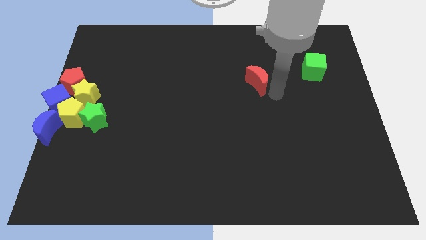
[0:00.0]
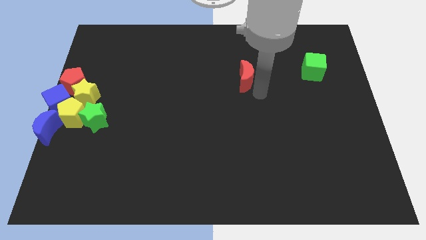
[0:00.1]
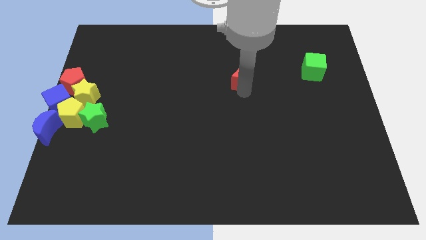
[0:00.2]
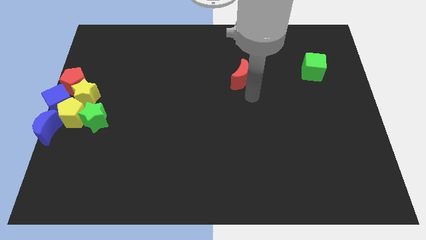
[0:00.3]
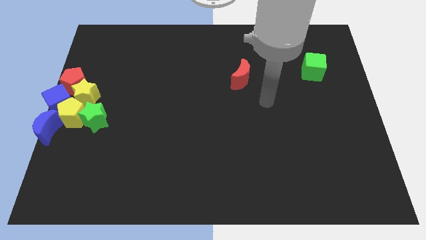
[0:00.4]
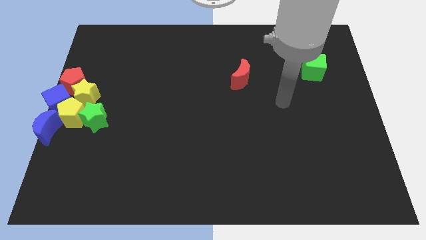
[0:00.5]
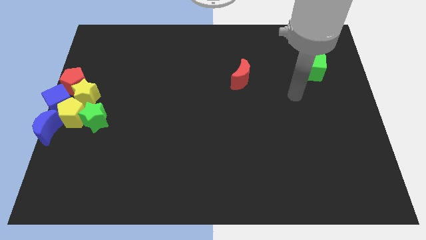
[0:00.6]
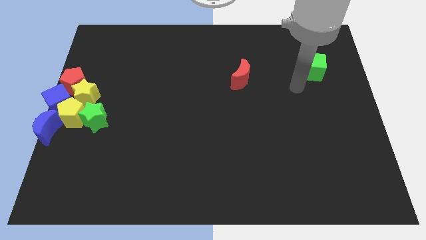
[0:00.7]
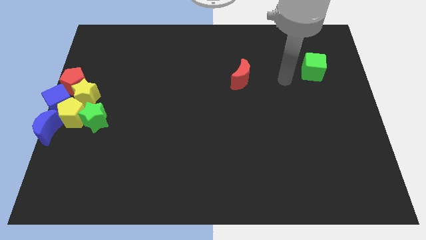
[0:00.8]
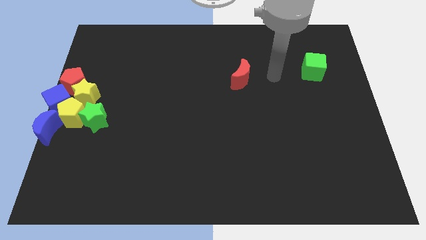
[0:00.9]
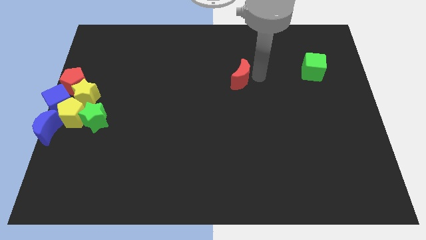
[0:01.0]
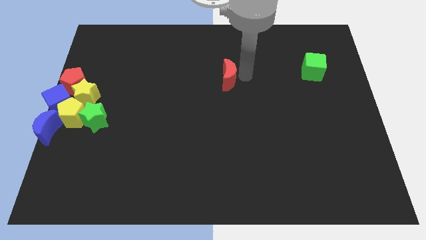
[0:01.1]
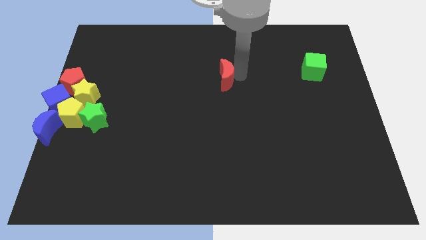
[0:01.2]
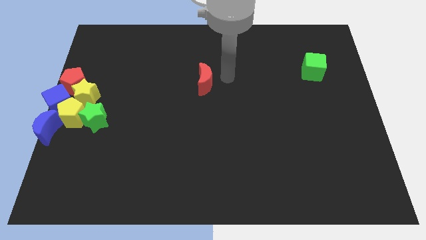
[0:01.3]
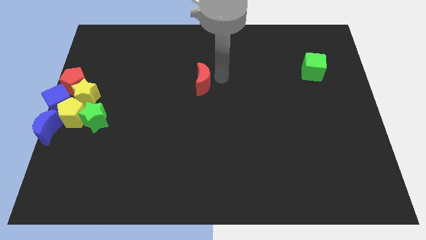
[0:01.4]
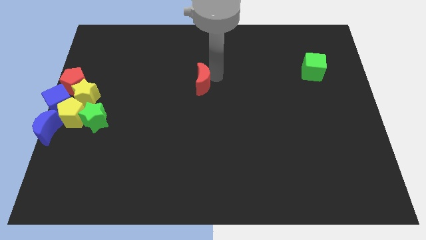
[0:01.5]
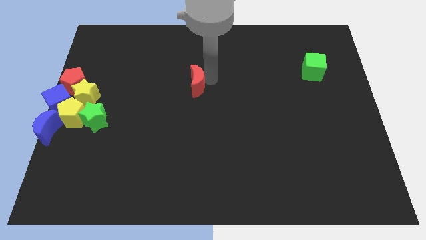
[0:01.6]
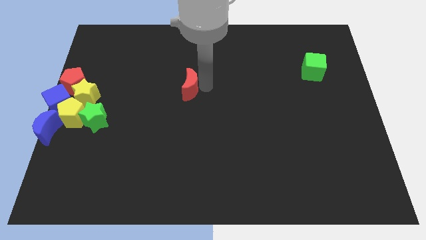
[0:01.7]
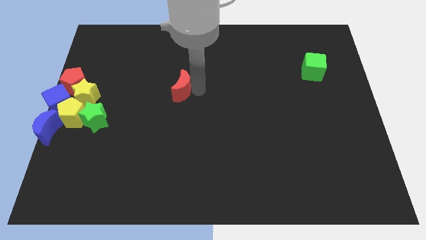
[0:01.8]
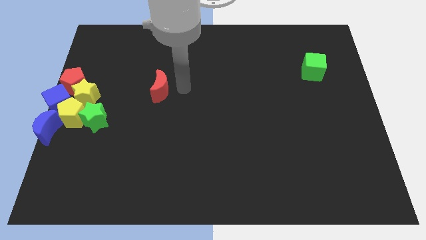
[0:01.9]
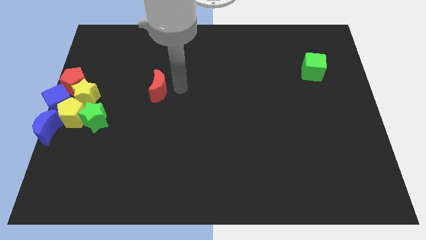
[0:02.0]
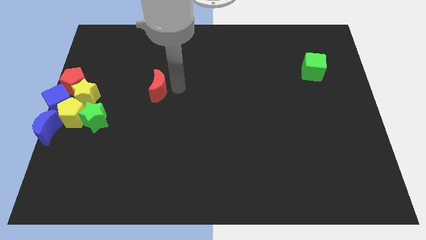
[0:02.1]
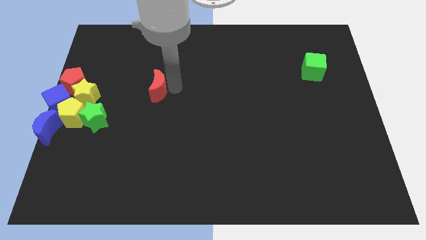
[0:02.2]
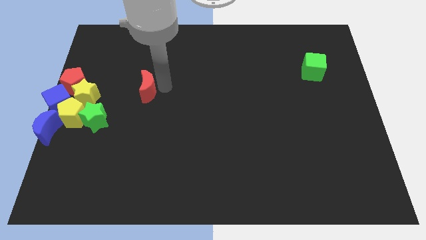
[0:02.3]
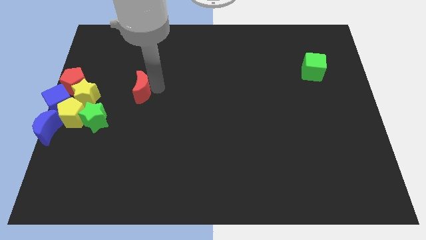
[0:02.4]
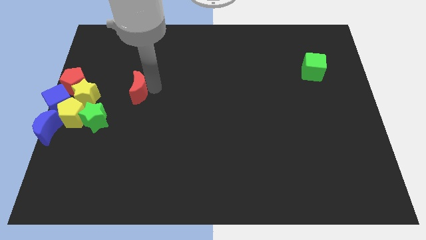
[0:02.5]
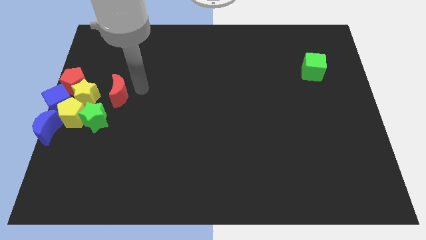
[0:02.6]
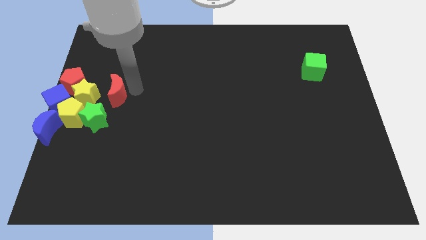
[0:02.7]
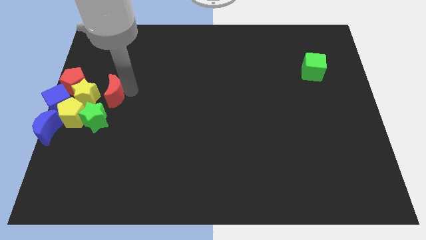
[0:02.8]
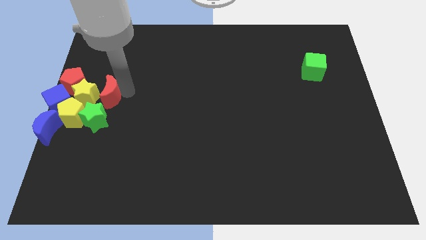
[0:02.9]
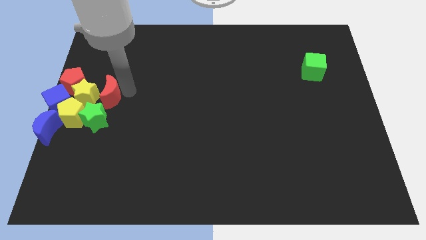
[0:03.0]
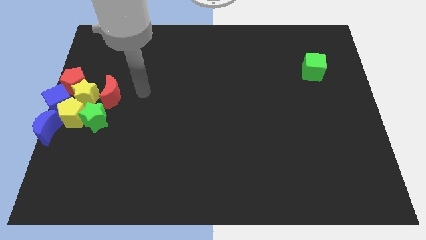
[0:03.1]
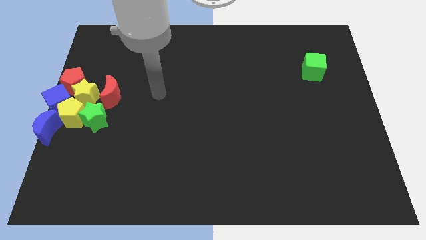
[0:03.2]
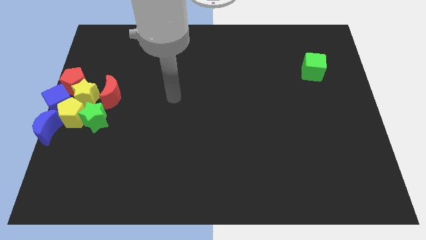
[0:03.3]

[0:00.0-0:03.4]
move the red crescent to the right of the yellow star

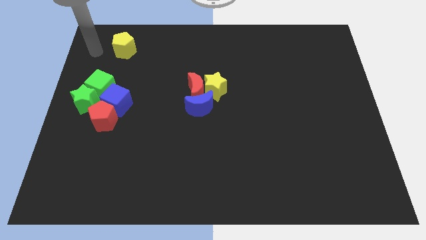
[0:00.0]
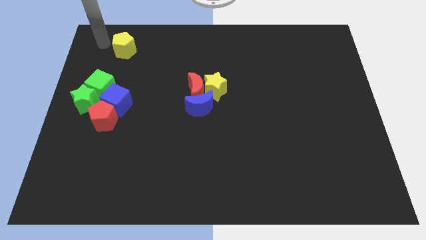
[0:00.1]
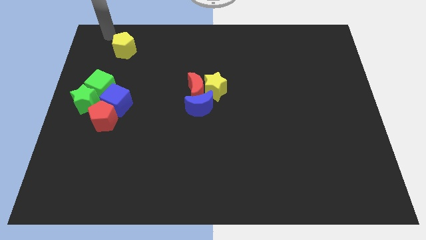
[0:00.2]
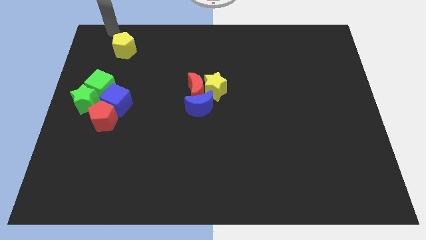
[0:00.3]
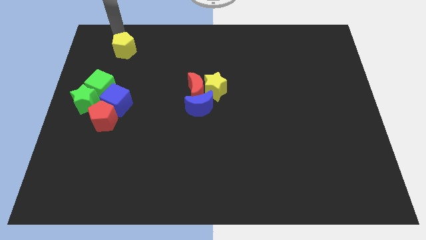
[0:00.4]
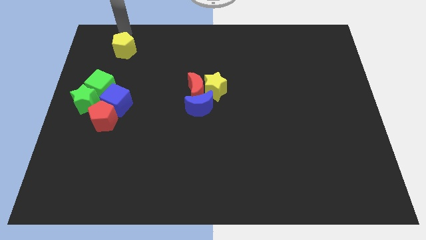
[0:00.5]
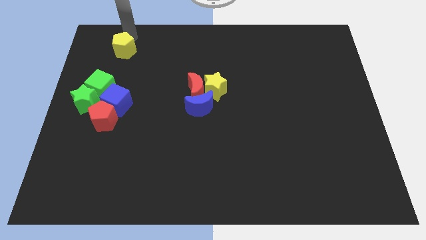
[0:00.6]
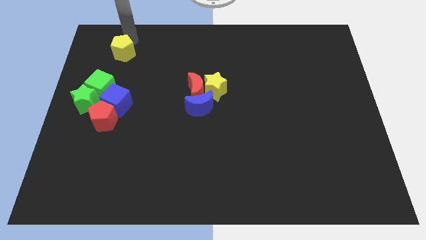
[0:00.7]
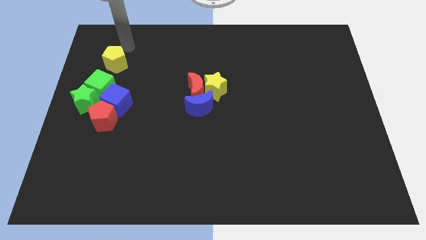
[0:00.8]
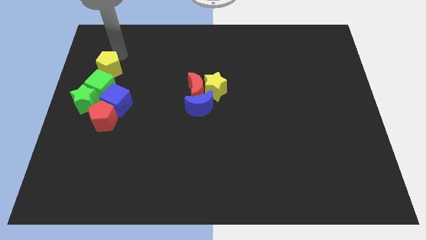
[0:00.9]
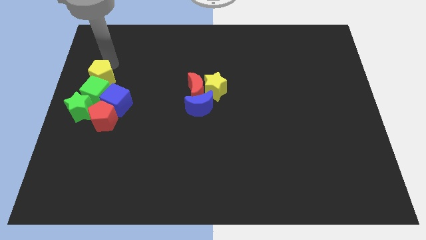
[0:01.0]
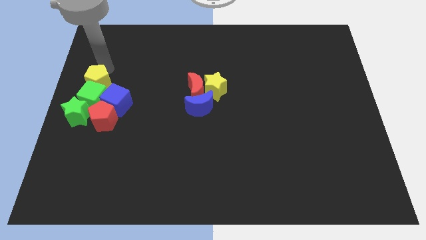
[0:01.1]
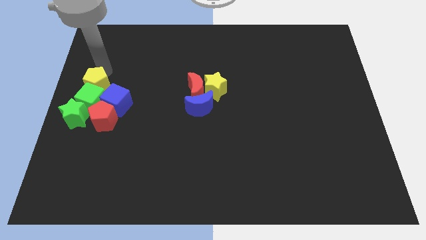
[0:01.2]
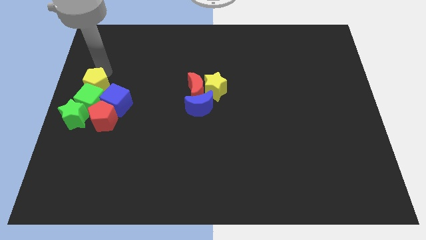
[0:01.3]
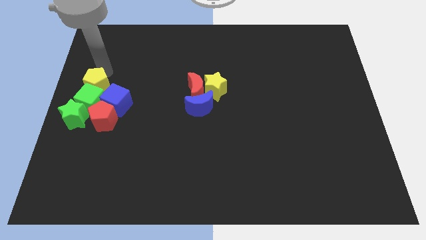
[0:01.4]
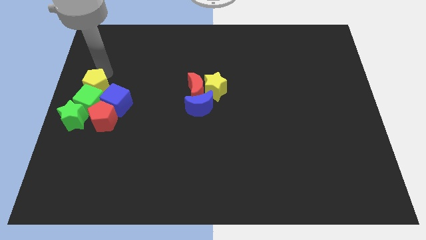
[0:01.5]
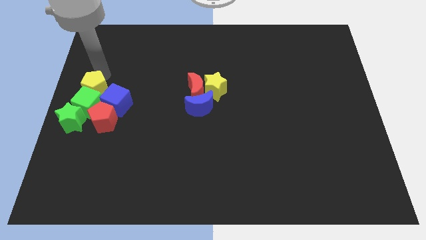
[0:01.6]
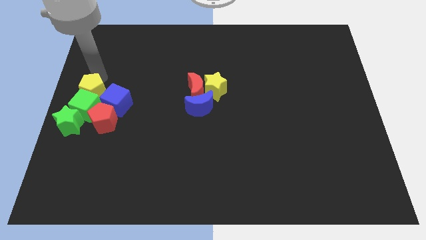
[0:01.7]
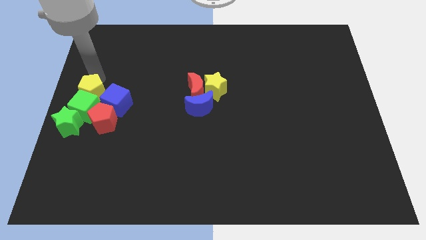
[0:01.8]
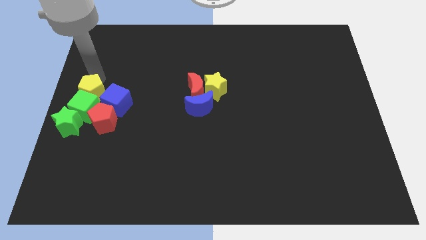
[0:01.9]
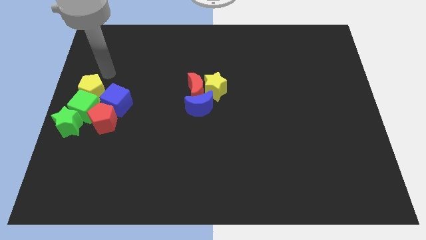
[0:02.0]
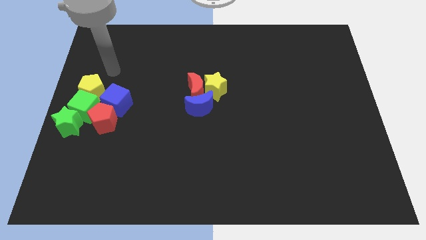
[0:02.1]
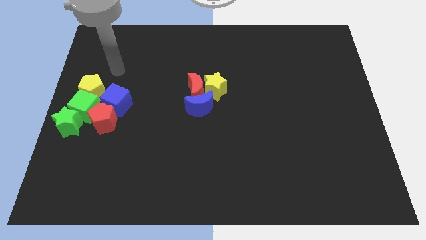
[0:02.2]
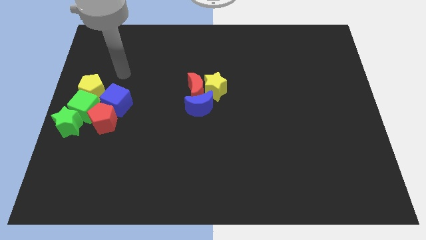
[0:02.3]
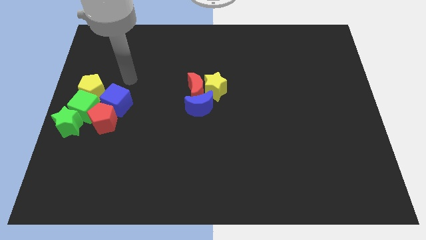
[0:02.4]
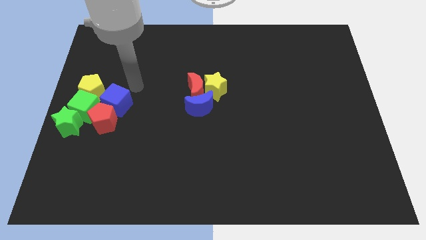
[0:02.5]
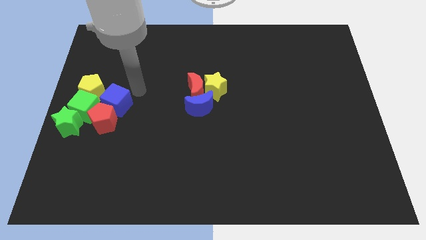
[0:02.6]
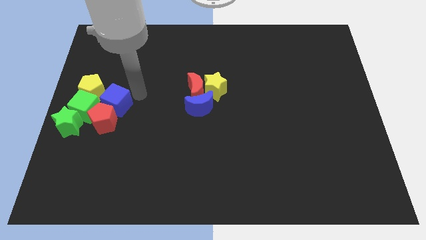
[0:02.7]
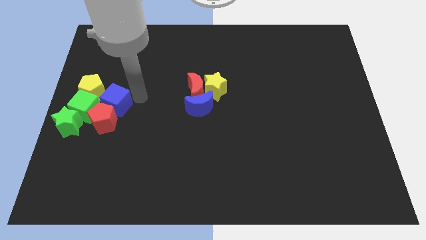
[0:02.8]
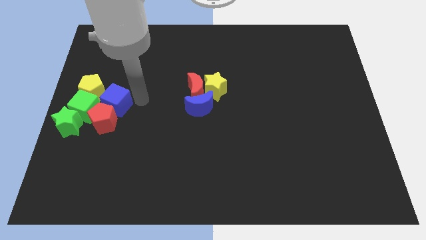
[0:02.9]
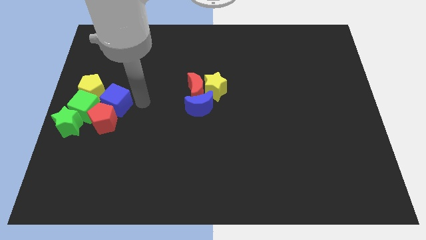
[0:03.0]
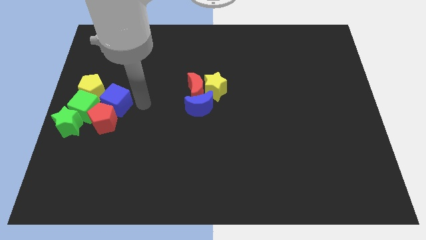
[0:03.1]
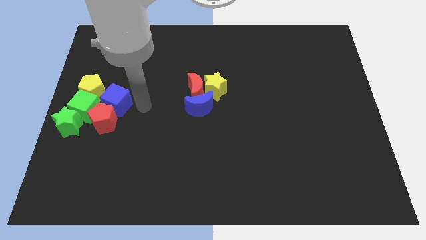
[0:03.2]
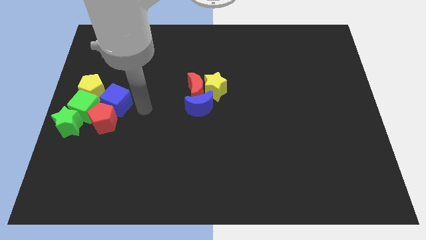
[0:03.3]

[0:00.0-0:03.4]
push yellow pentagon into green cube

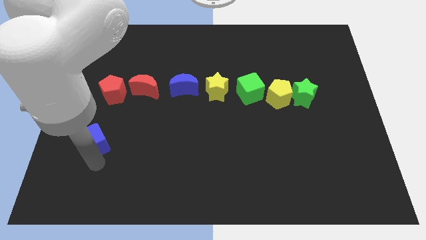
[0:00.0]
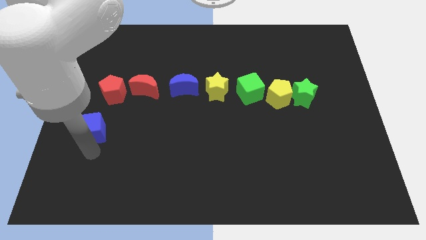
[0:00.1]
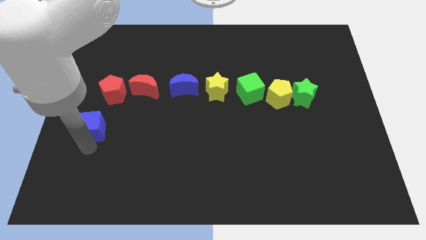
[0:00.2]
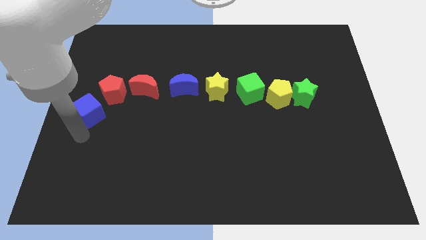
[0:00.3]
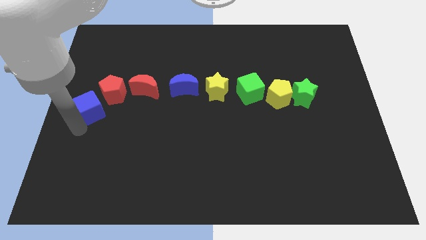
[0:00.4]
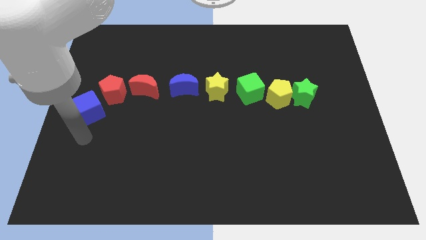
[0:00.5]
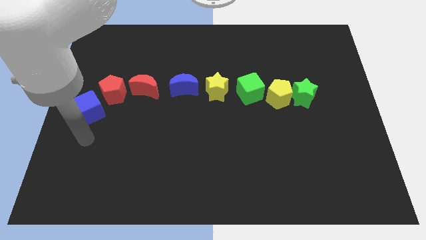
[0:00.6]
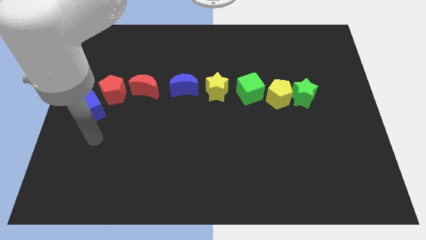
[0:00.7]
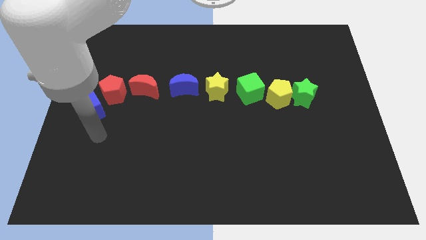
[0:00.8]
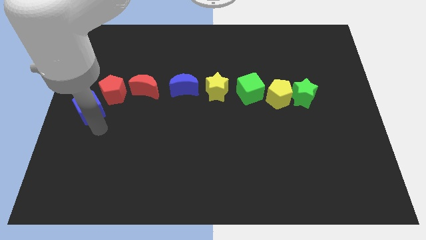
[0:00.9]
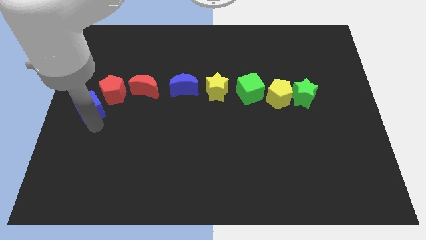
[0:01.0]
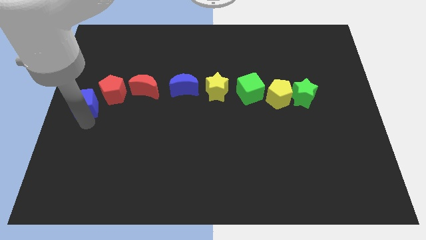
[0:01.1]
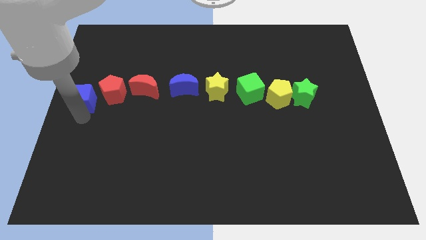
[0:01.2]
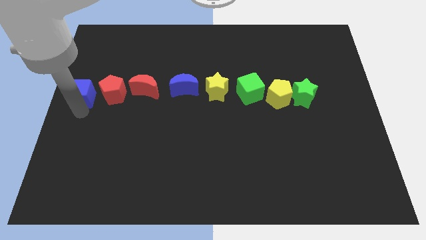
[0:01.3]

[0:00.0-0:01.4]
push the blue cube to the left of red pentagon

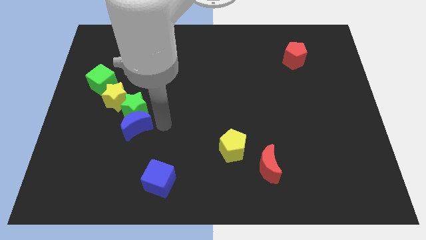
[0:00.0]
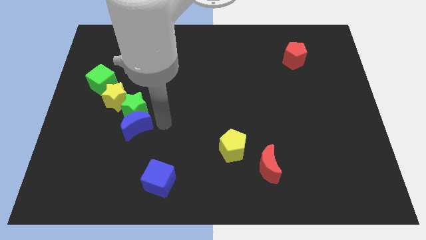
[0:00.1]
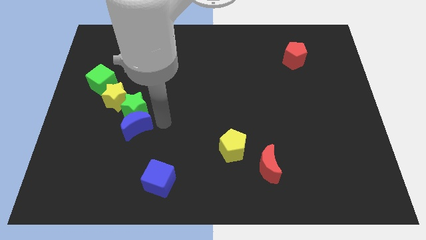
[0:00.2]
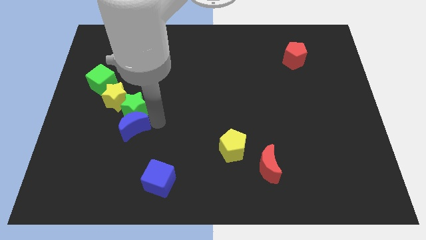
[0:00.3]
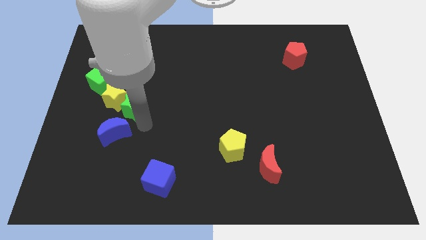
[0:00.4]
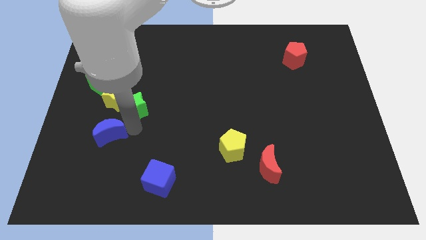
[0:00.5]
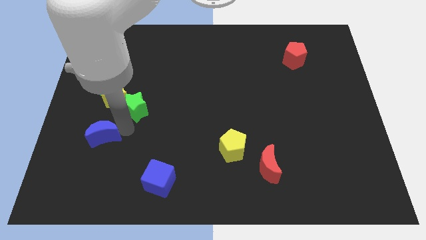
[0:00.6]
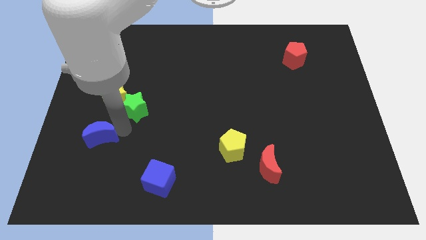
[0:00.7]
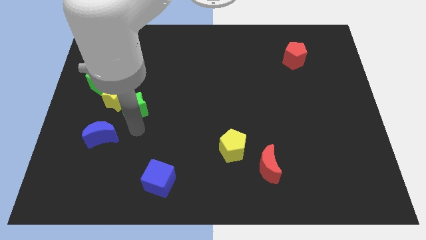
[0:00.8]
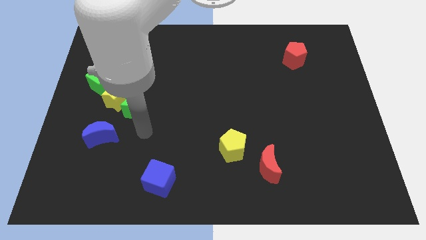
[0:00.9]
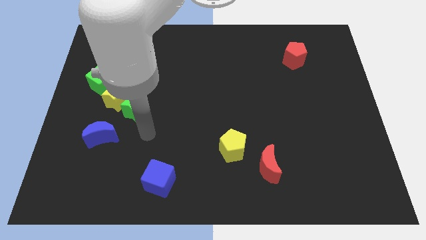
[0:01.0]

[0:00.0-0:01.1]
separate blue moon from green star
